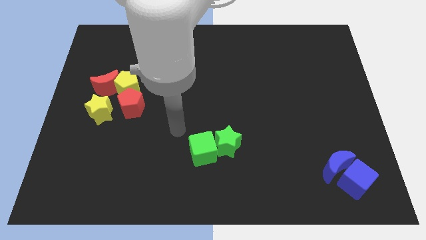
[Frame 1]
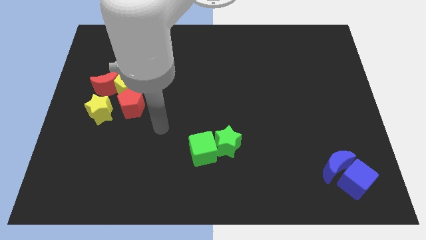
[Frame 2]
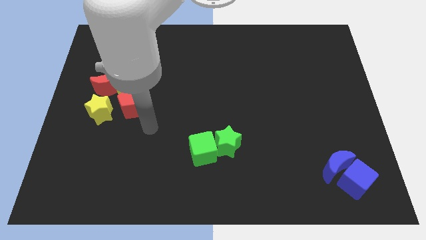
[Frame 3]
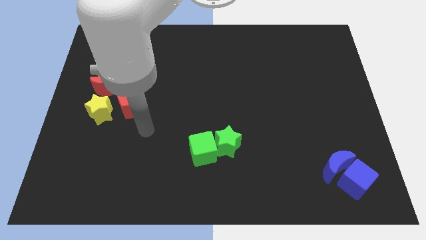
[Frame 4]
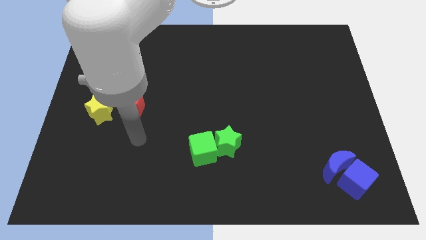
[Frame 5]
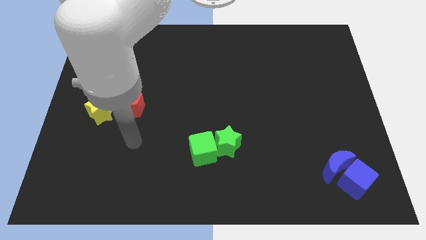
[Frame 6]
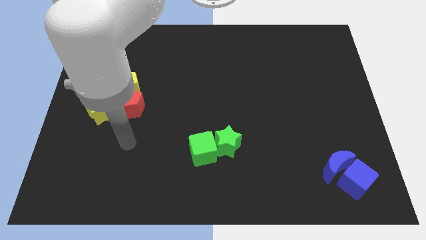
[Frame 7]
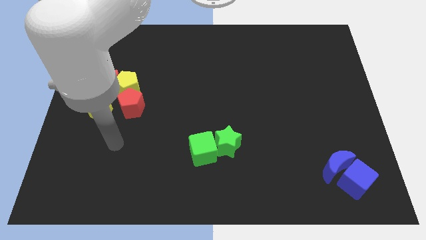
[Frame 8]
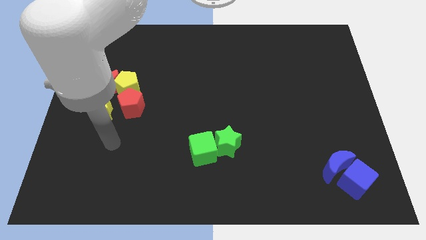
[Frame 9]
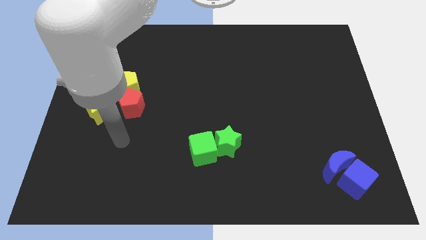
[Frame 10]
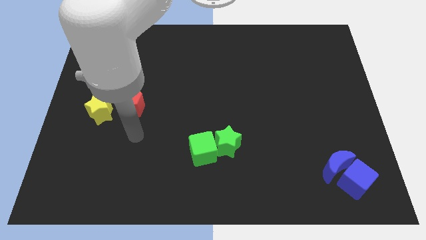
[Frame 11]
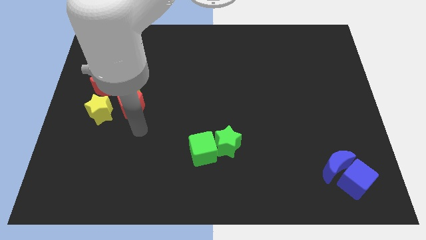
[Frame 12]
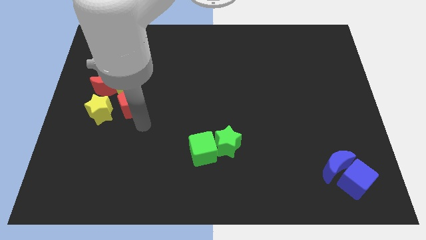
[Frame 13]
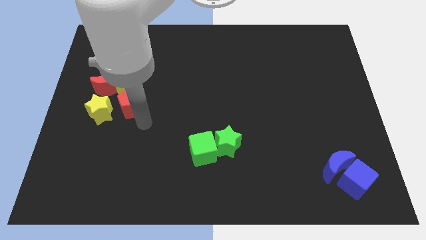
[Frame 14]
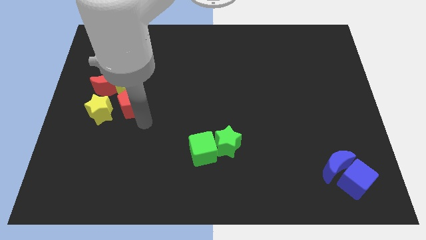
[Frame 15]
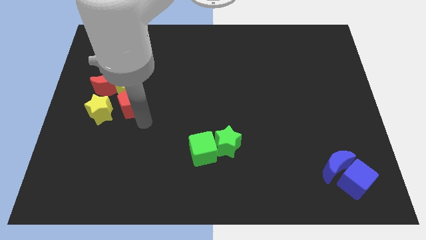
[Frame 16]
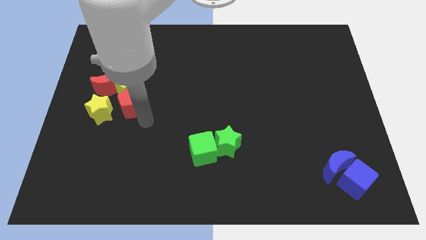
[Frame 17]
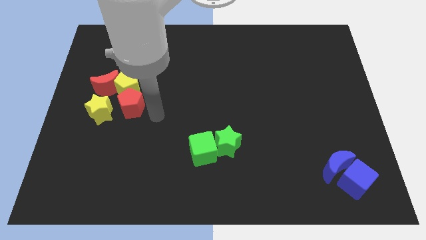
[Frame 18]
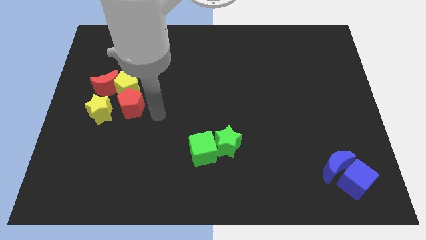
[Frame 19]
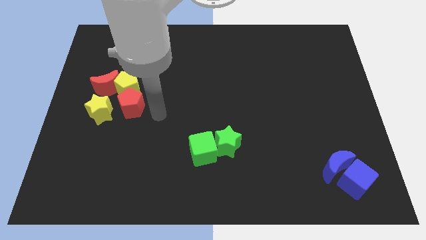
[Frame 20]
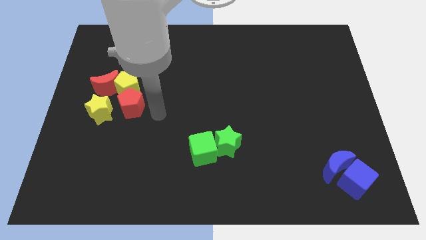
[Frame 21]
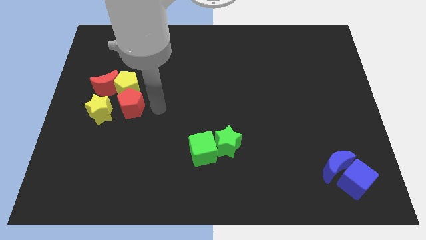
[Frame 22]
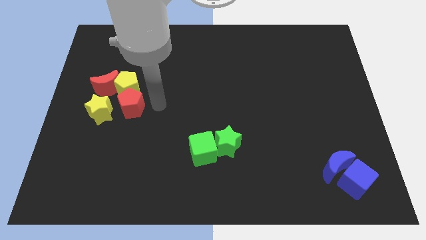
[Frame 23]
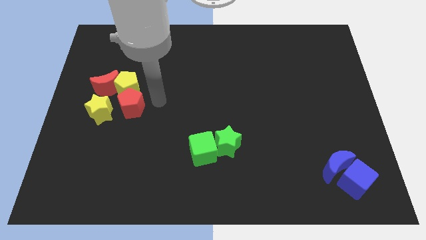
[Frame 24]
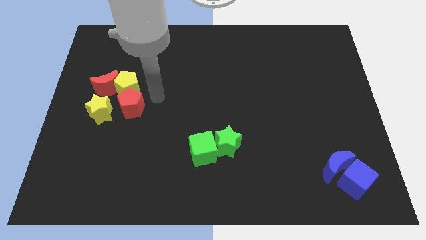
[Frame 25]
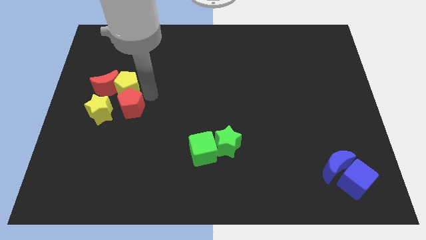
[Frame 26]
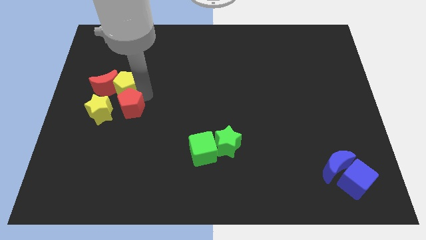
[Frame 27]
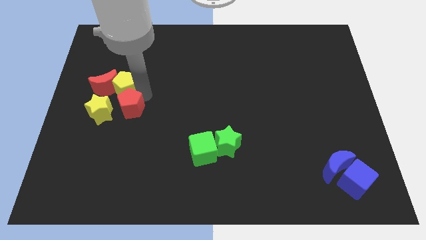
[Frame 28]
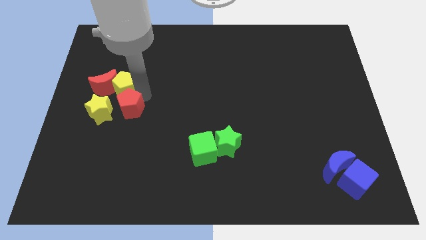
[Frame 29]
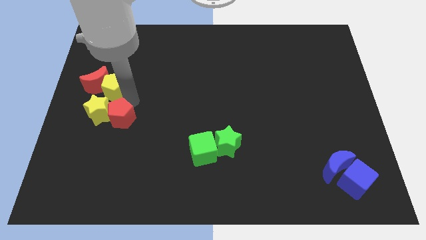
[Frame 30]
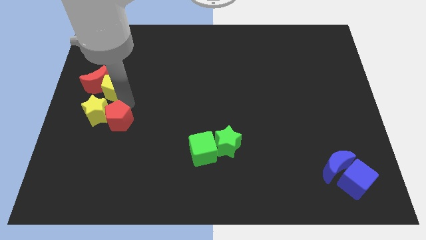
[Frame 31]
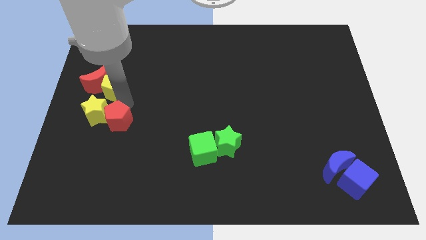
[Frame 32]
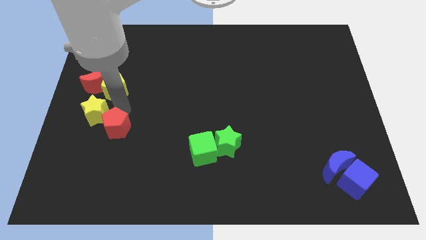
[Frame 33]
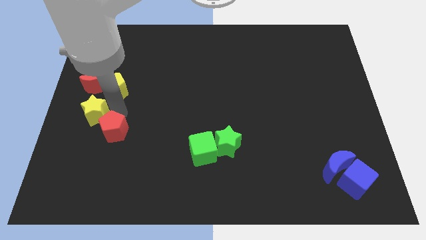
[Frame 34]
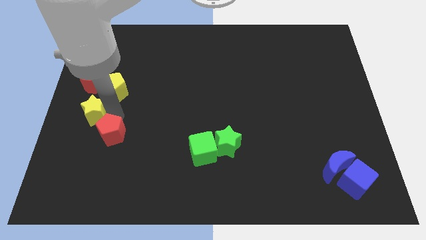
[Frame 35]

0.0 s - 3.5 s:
place red pentagon below the yellow star

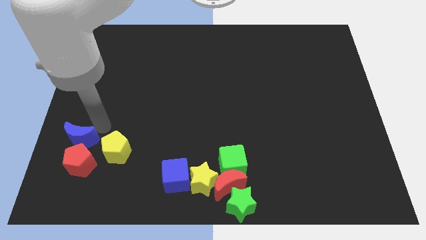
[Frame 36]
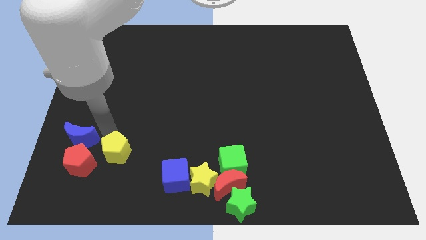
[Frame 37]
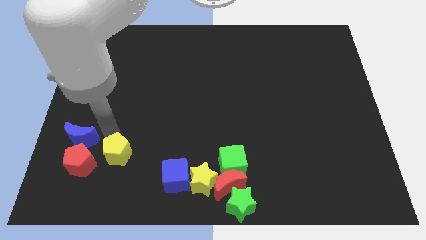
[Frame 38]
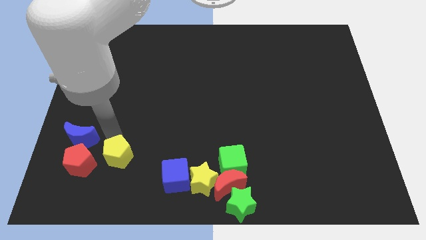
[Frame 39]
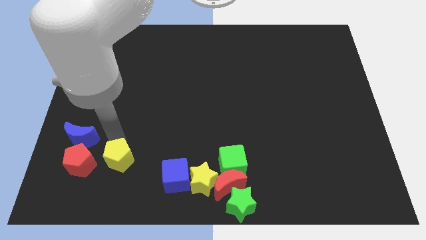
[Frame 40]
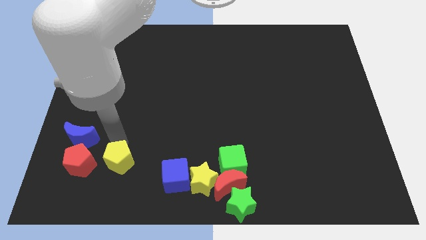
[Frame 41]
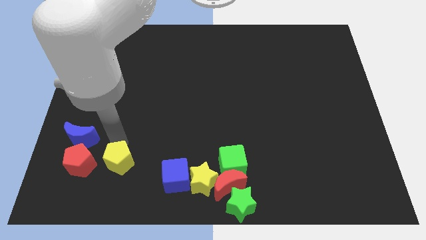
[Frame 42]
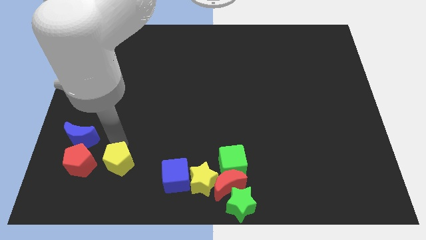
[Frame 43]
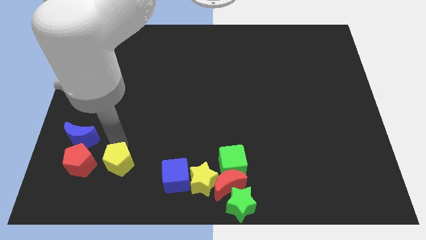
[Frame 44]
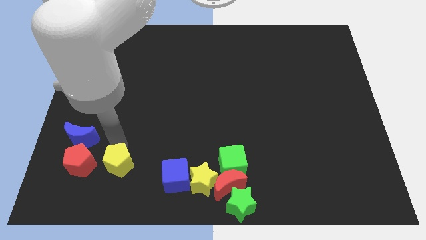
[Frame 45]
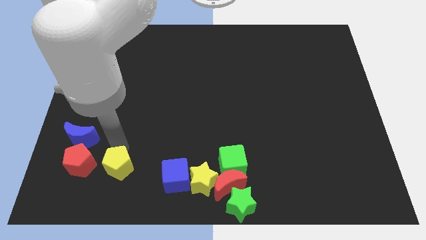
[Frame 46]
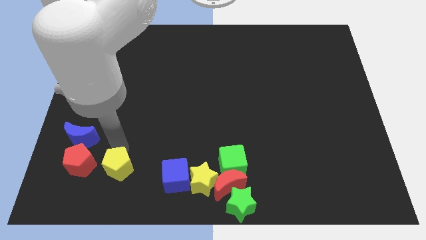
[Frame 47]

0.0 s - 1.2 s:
place yellow pentagon beside red pentagon

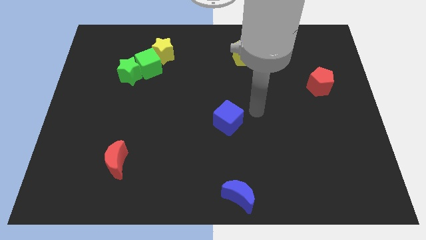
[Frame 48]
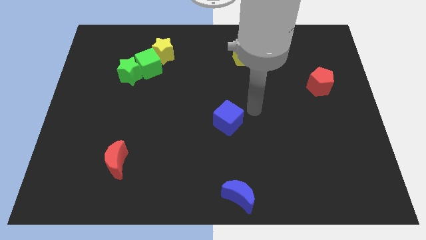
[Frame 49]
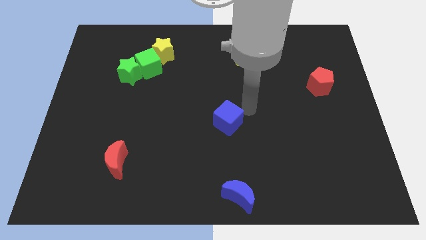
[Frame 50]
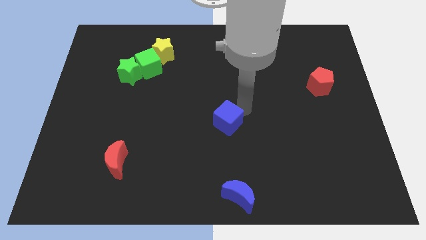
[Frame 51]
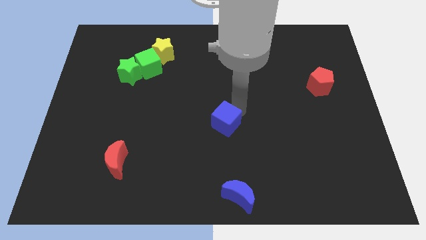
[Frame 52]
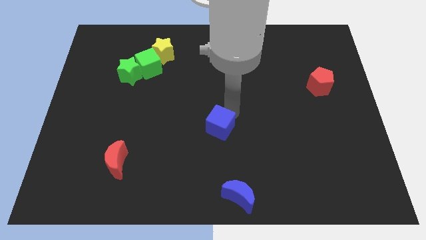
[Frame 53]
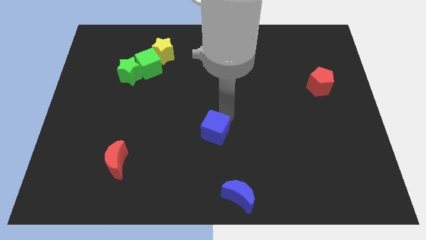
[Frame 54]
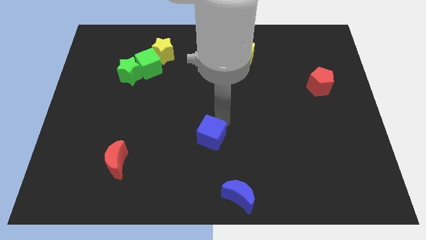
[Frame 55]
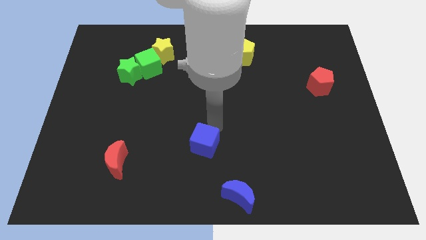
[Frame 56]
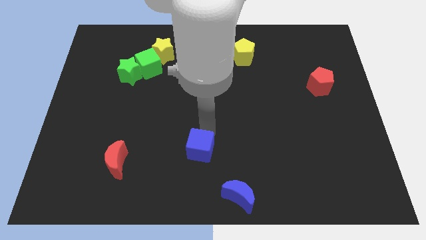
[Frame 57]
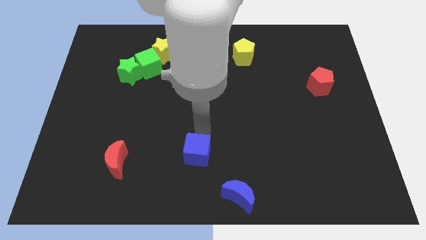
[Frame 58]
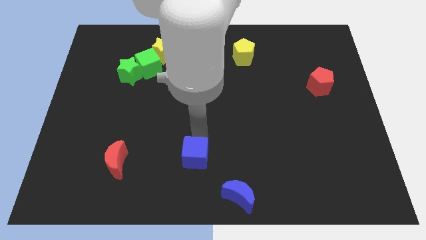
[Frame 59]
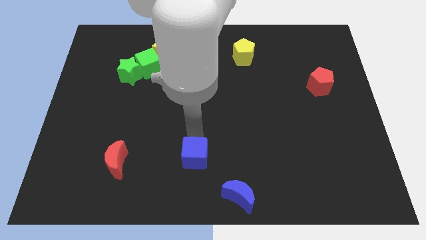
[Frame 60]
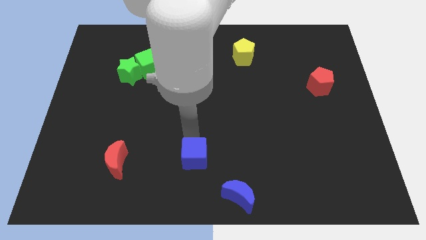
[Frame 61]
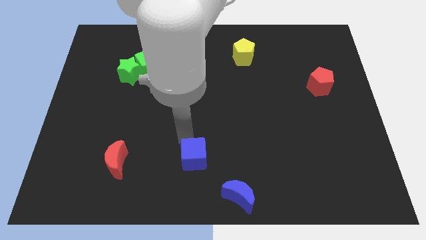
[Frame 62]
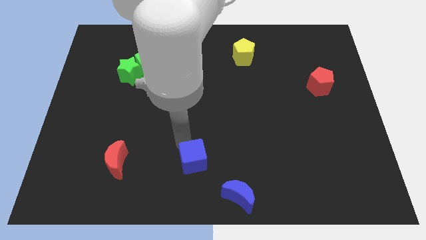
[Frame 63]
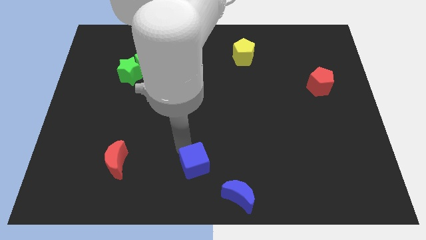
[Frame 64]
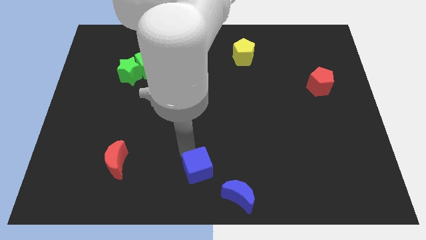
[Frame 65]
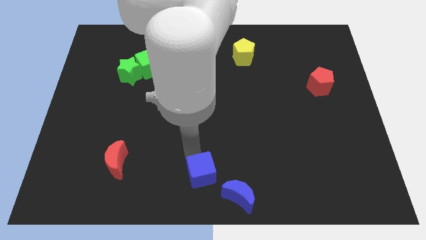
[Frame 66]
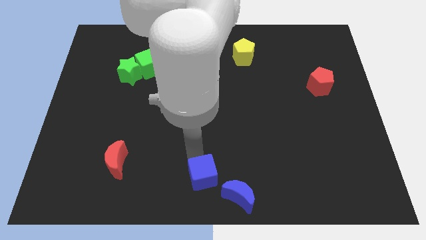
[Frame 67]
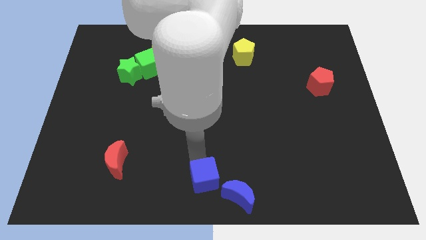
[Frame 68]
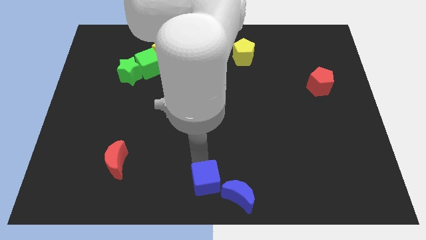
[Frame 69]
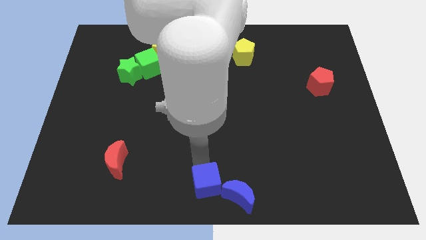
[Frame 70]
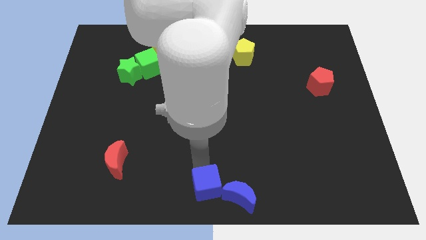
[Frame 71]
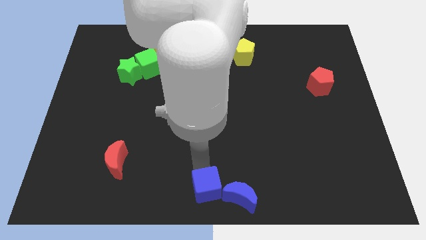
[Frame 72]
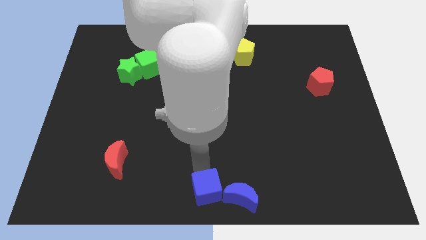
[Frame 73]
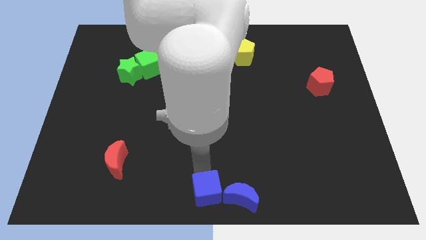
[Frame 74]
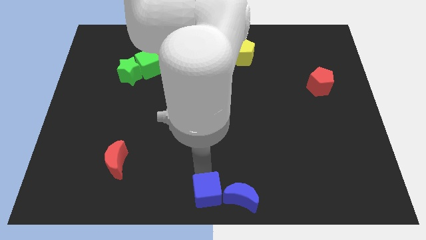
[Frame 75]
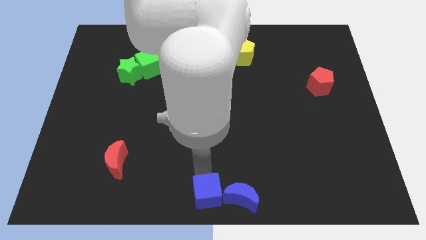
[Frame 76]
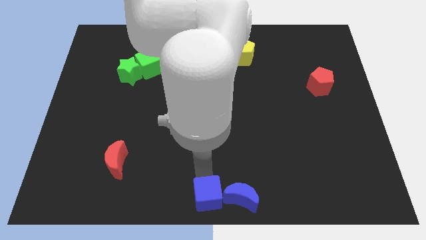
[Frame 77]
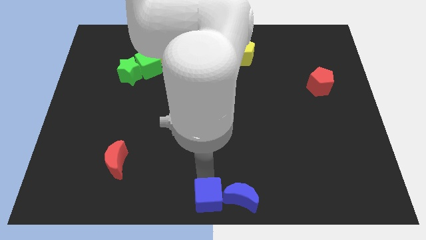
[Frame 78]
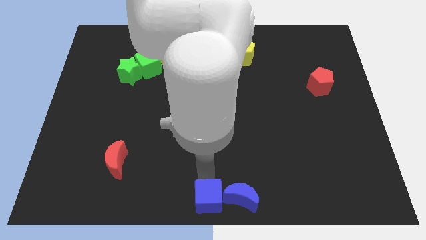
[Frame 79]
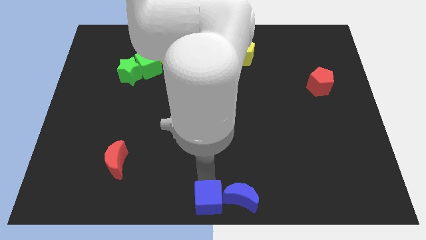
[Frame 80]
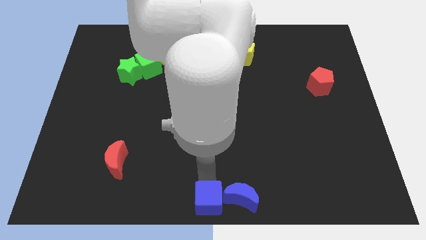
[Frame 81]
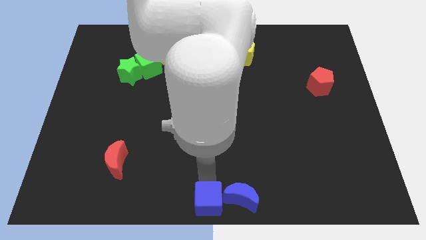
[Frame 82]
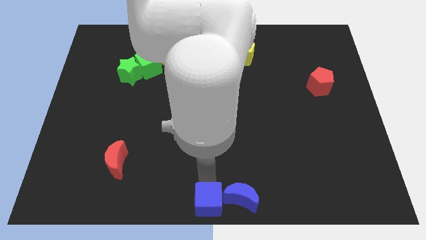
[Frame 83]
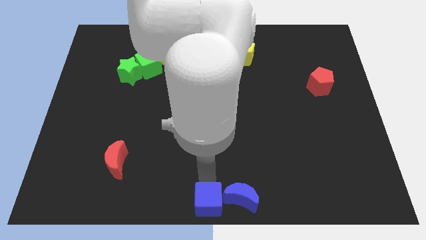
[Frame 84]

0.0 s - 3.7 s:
place the blue cube left to the blue crescent

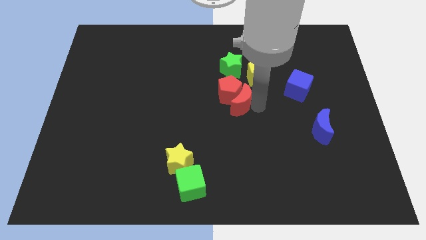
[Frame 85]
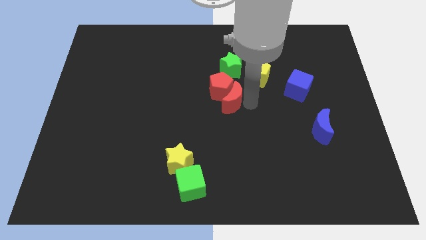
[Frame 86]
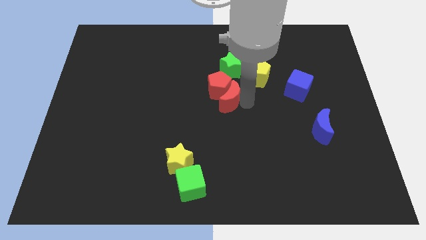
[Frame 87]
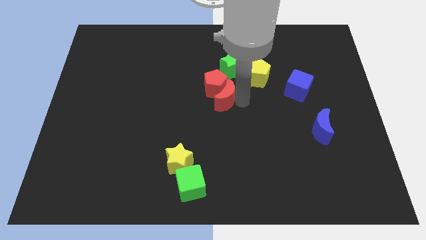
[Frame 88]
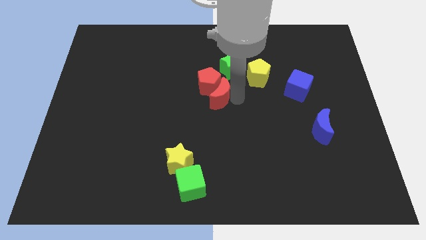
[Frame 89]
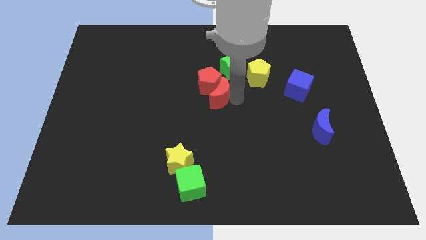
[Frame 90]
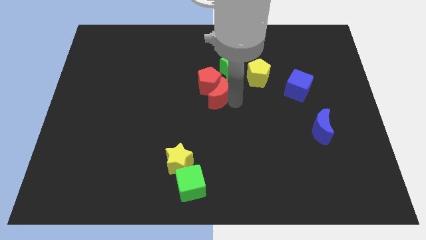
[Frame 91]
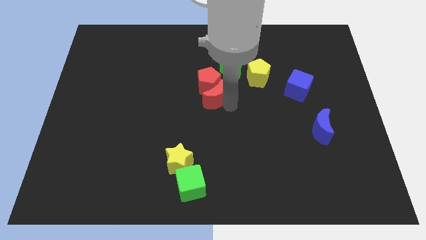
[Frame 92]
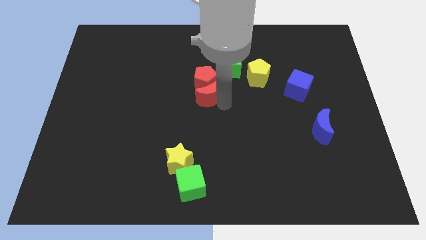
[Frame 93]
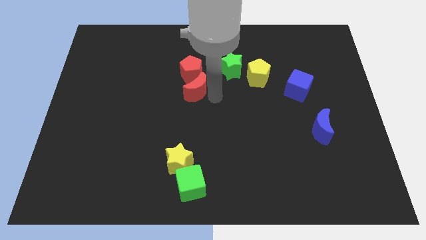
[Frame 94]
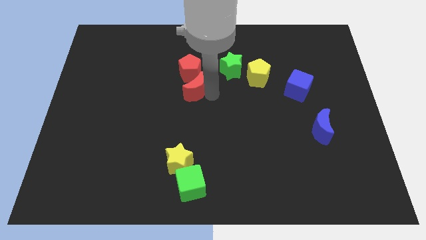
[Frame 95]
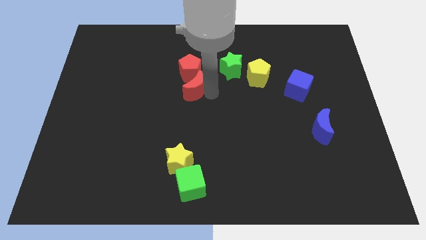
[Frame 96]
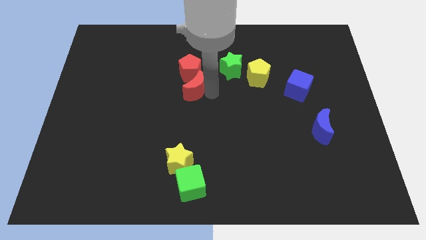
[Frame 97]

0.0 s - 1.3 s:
push the group of red blocks to the left of the green star
